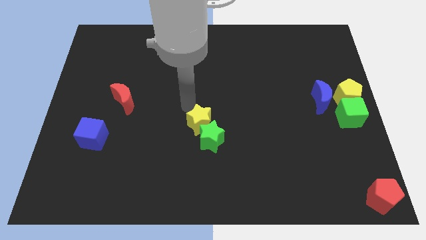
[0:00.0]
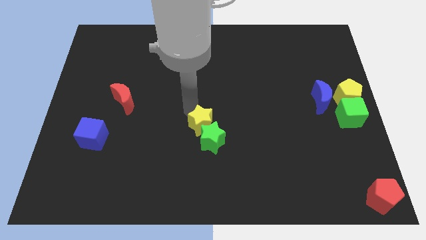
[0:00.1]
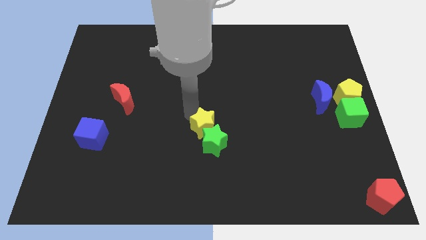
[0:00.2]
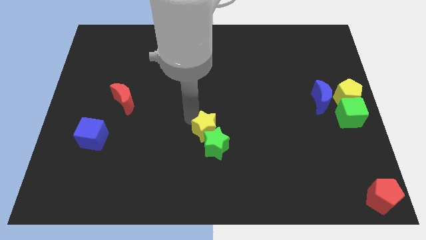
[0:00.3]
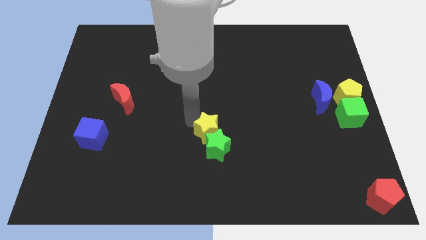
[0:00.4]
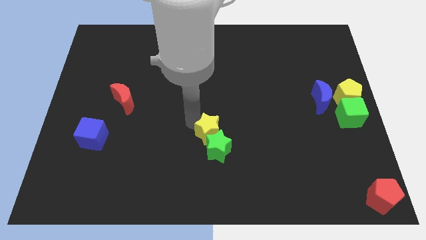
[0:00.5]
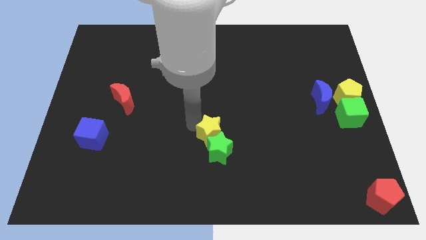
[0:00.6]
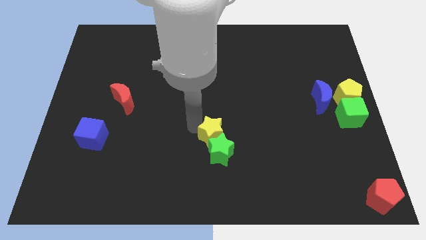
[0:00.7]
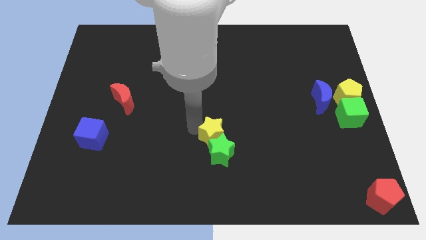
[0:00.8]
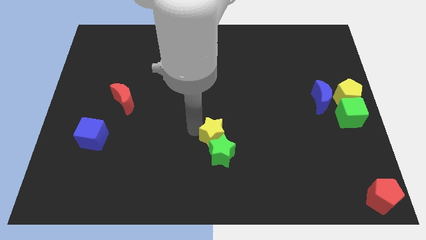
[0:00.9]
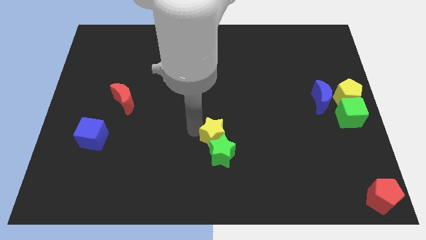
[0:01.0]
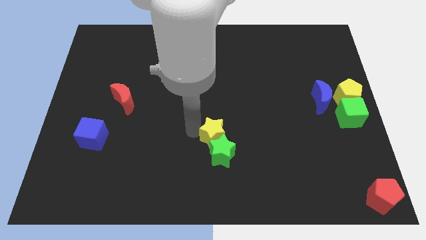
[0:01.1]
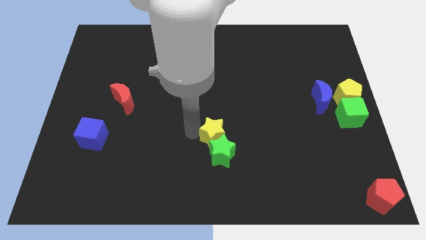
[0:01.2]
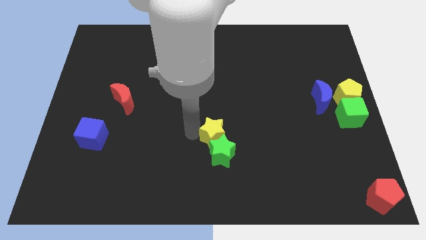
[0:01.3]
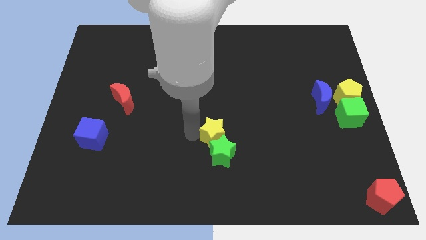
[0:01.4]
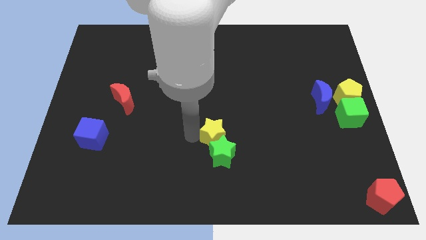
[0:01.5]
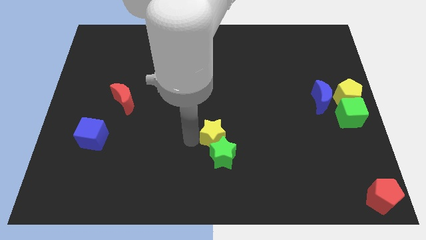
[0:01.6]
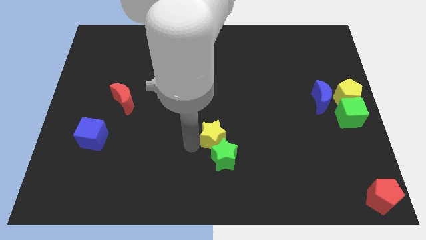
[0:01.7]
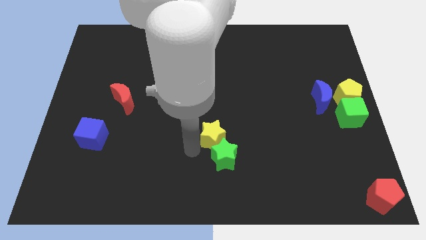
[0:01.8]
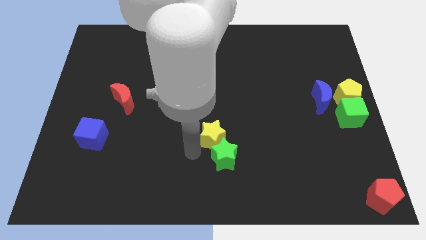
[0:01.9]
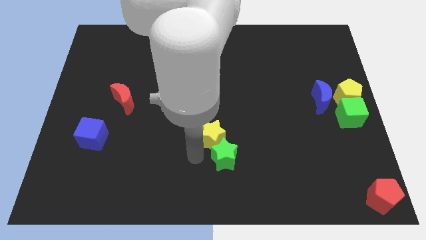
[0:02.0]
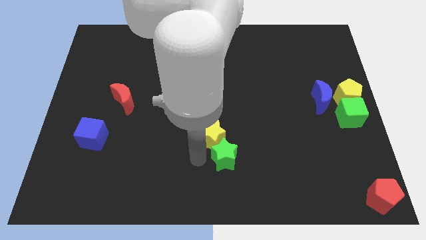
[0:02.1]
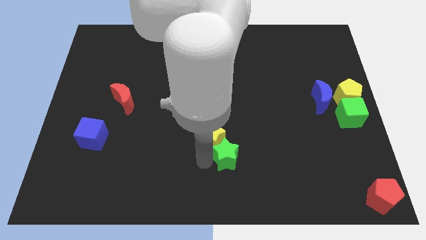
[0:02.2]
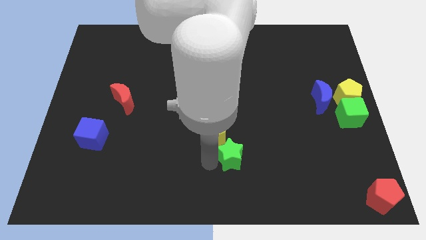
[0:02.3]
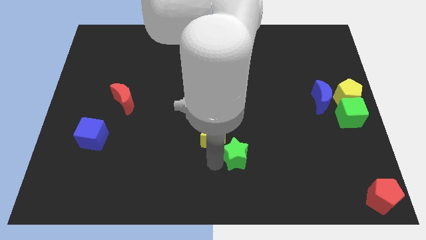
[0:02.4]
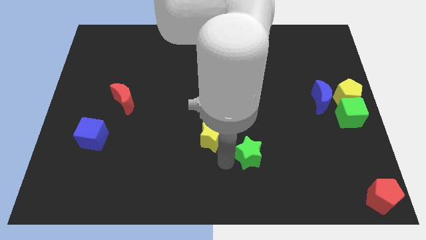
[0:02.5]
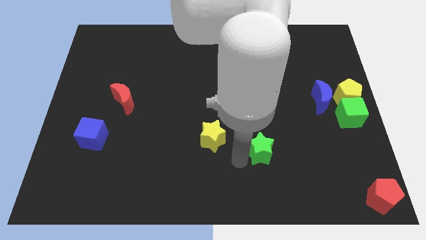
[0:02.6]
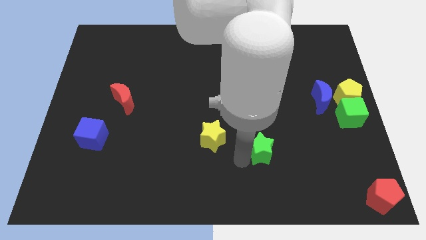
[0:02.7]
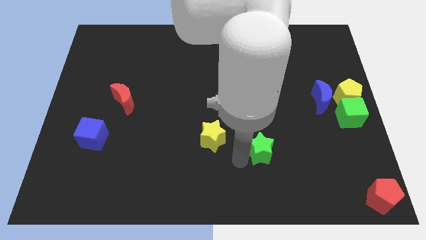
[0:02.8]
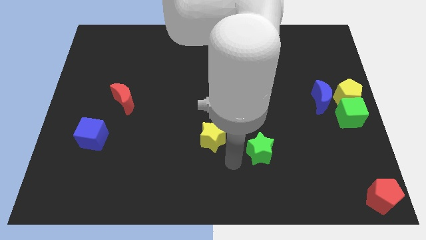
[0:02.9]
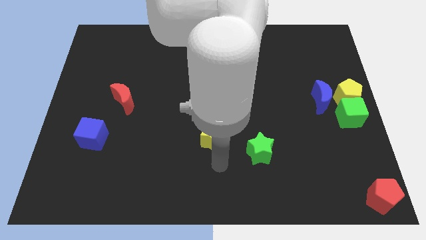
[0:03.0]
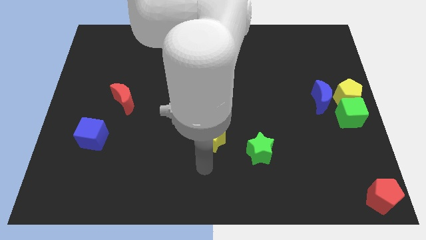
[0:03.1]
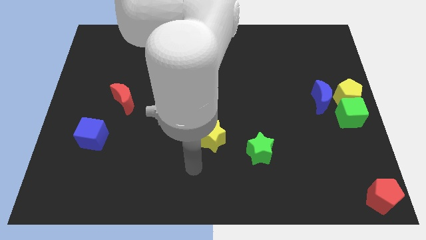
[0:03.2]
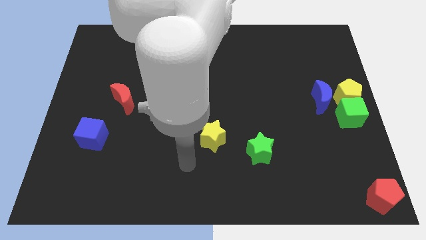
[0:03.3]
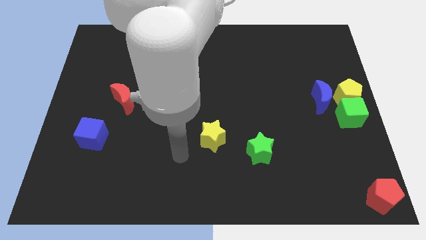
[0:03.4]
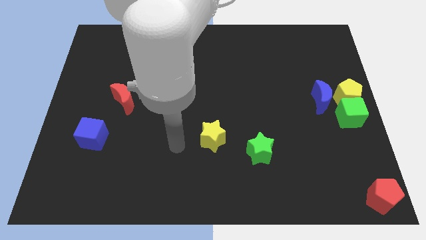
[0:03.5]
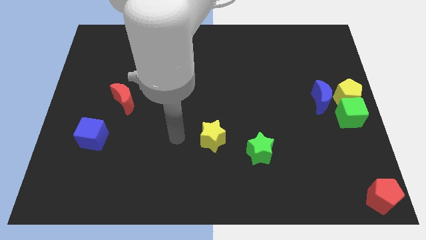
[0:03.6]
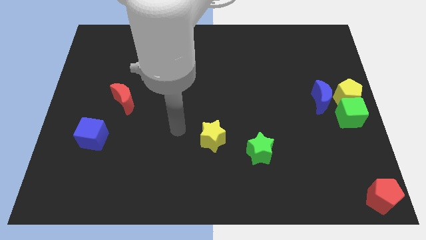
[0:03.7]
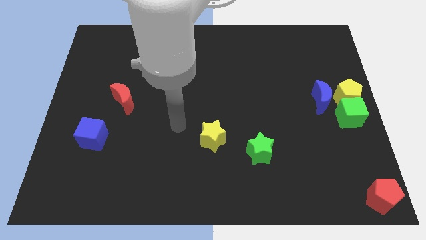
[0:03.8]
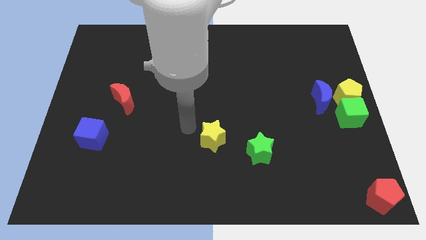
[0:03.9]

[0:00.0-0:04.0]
move the green star away from the yellow star

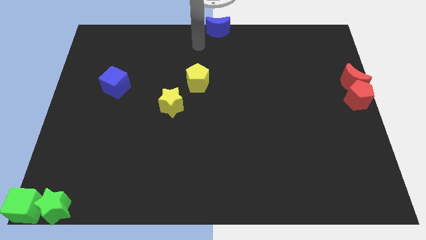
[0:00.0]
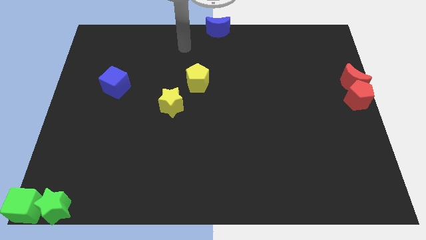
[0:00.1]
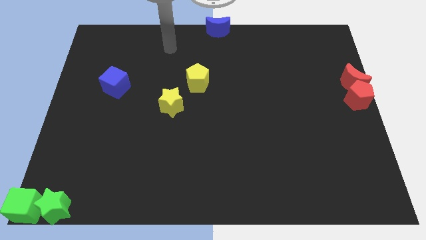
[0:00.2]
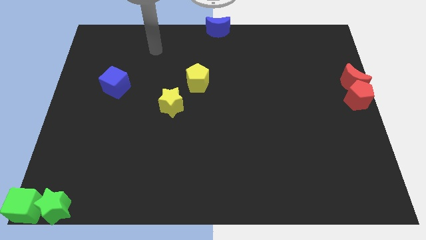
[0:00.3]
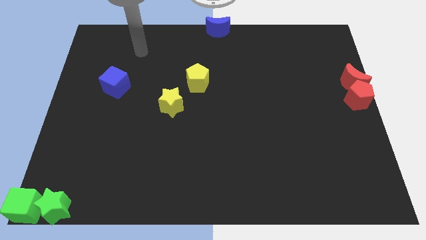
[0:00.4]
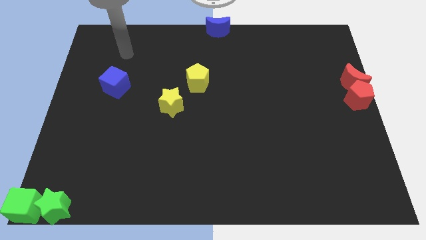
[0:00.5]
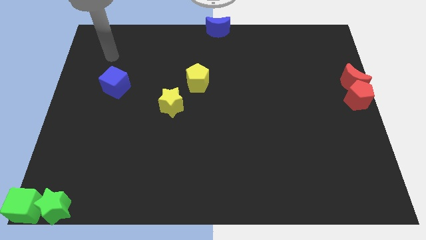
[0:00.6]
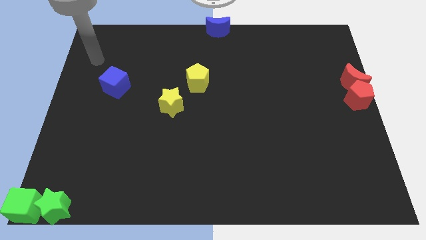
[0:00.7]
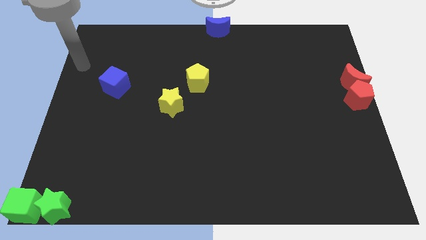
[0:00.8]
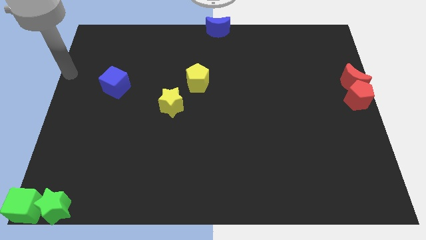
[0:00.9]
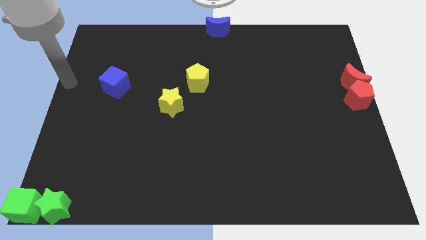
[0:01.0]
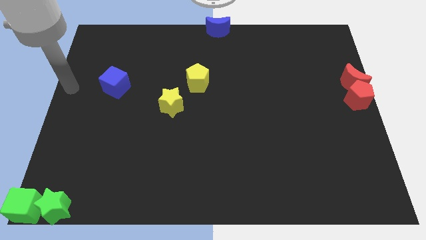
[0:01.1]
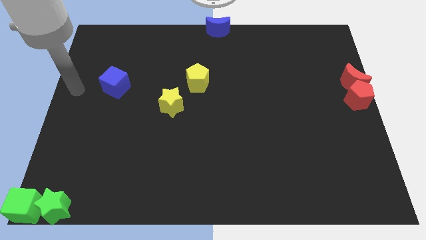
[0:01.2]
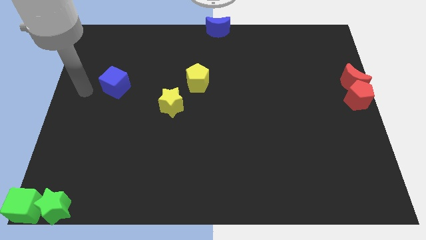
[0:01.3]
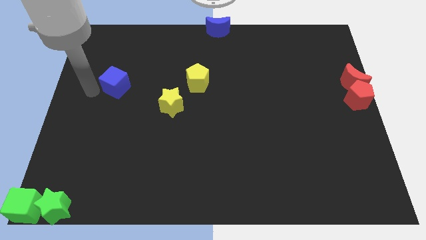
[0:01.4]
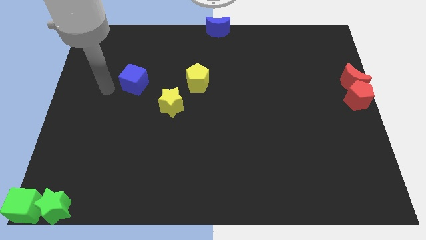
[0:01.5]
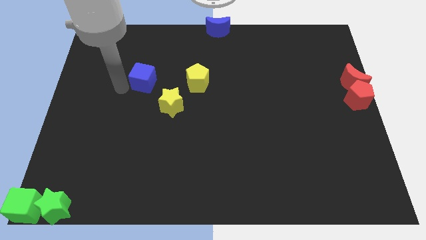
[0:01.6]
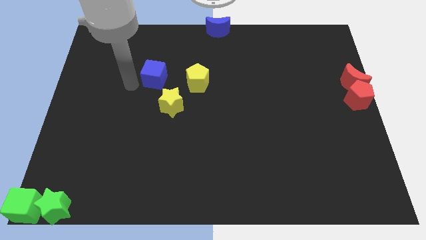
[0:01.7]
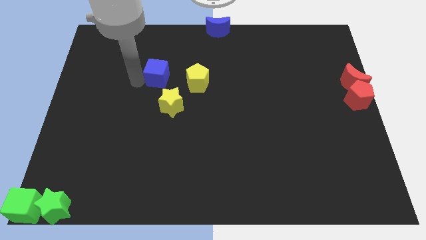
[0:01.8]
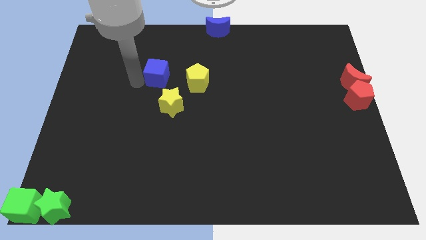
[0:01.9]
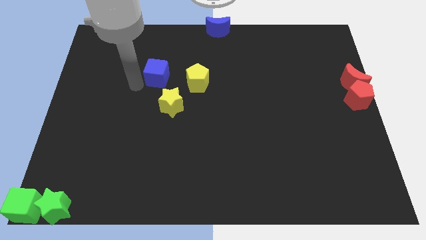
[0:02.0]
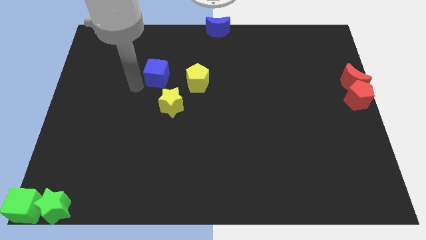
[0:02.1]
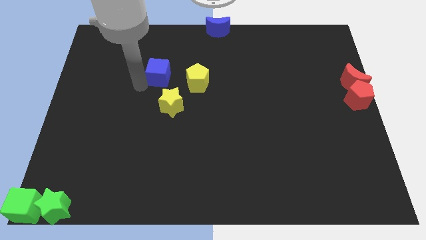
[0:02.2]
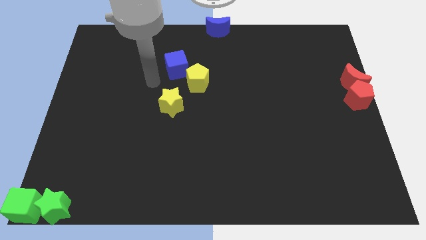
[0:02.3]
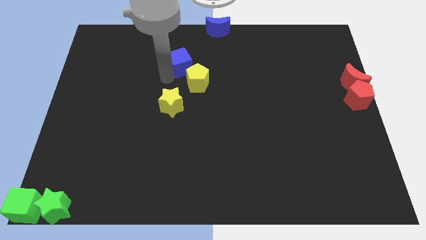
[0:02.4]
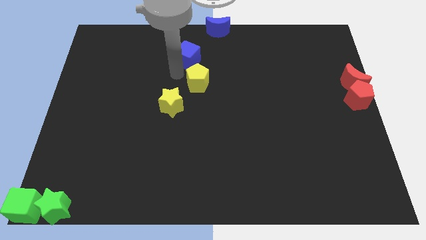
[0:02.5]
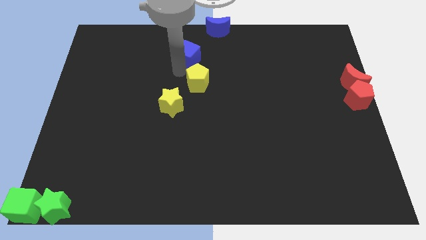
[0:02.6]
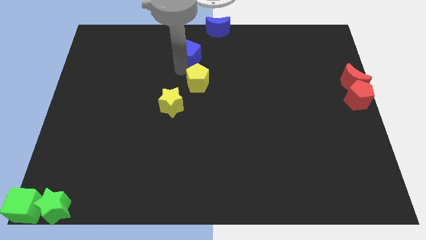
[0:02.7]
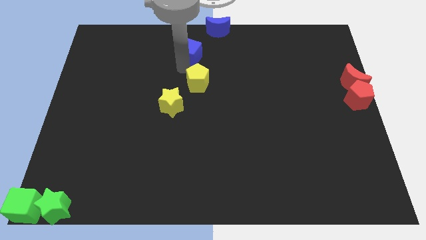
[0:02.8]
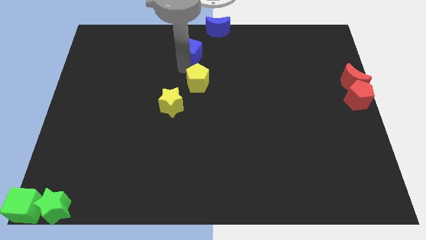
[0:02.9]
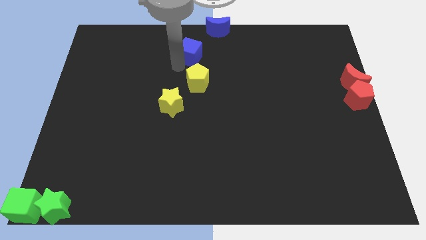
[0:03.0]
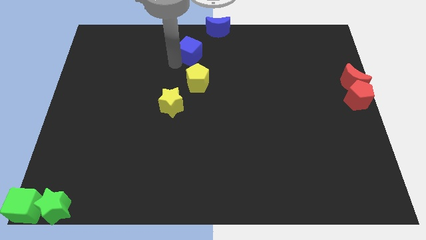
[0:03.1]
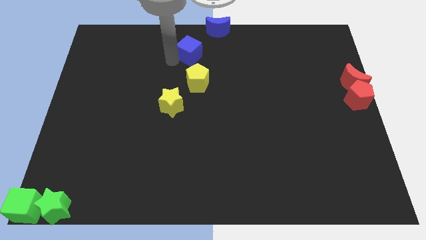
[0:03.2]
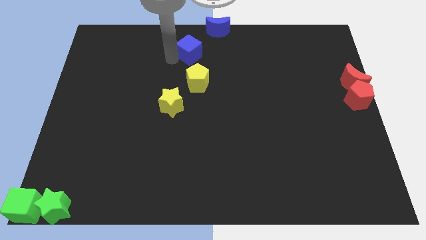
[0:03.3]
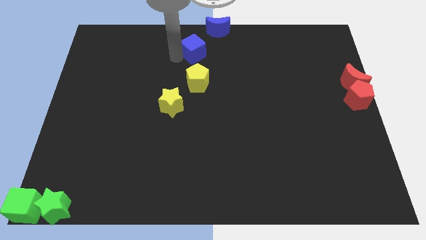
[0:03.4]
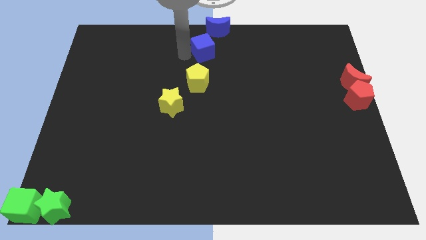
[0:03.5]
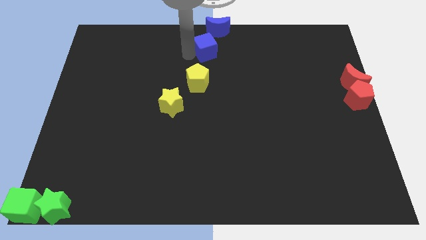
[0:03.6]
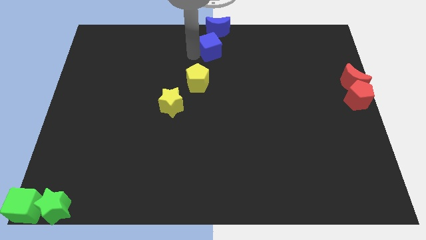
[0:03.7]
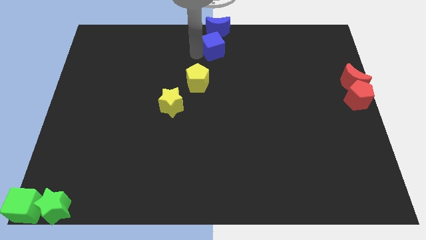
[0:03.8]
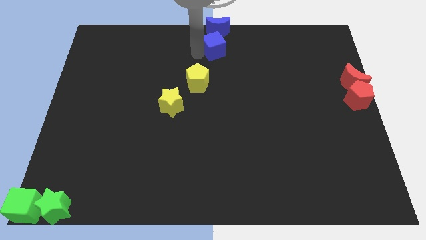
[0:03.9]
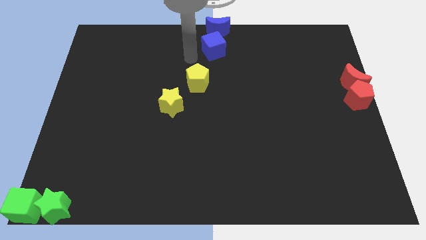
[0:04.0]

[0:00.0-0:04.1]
place the bleu cube underneath the blue crescent

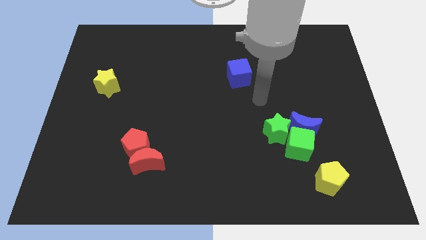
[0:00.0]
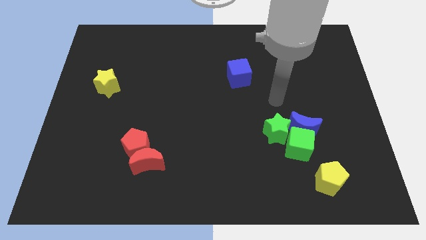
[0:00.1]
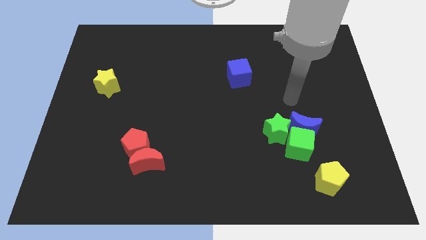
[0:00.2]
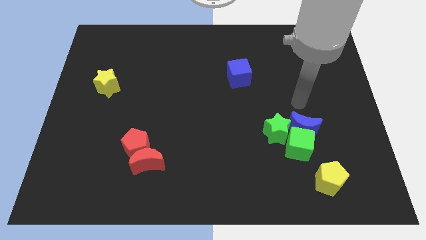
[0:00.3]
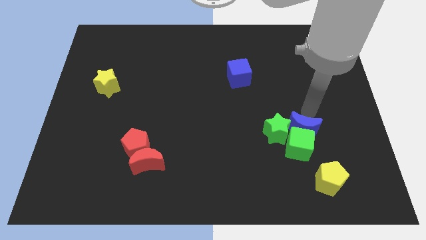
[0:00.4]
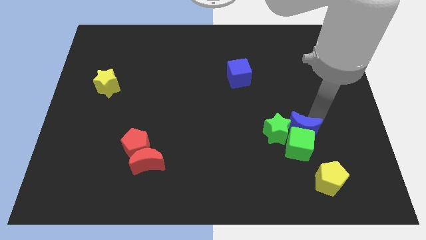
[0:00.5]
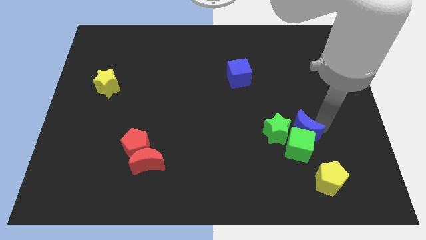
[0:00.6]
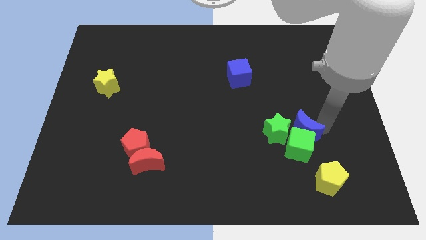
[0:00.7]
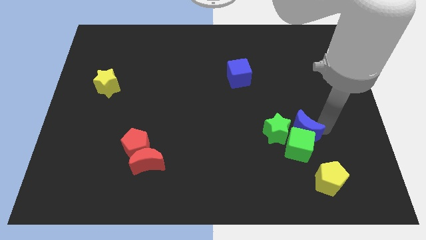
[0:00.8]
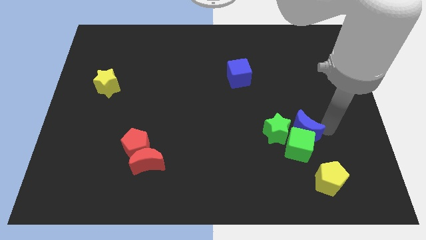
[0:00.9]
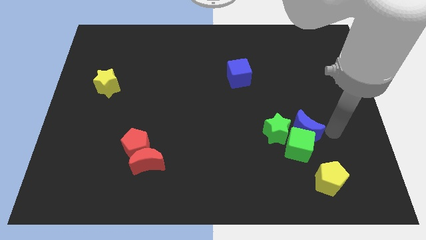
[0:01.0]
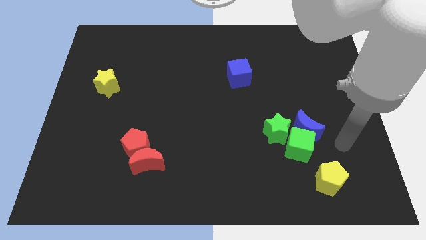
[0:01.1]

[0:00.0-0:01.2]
place your arm at the right of the blue crescent
